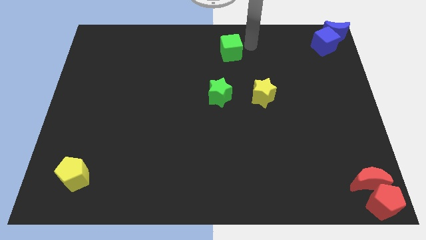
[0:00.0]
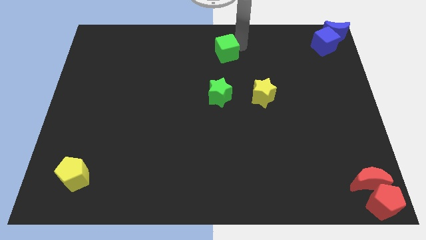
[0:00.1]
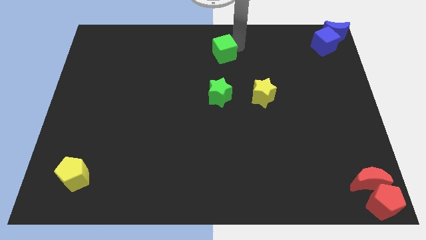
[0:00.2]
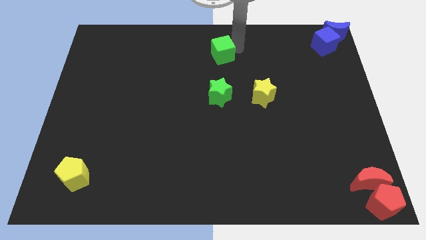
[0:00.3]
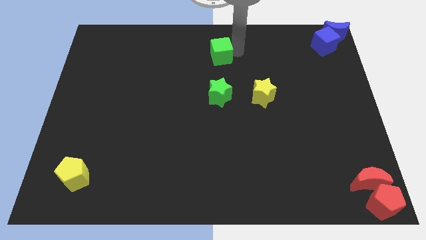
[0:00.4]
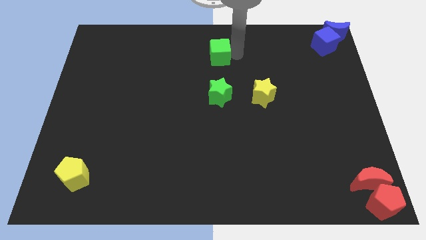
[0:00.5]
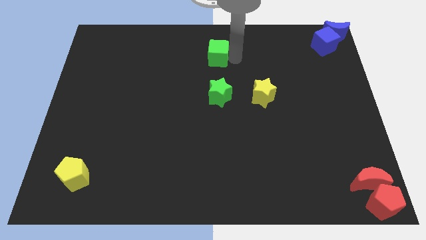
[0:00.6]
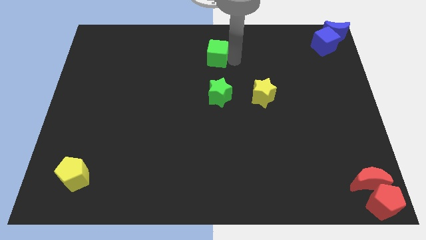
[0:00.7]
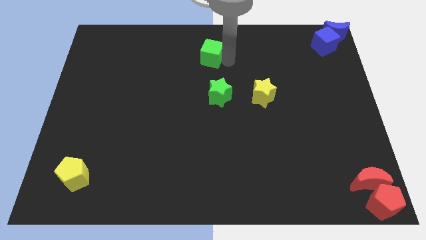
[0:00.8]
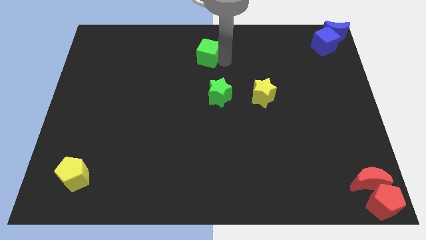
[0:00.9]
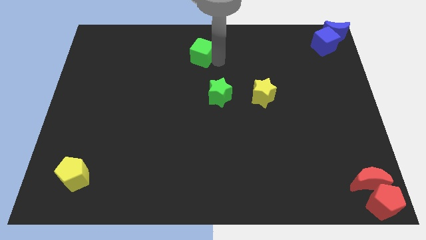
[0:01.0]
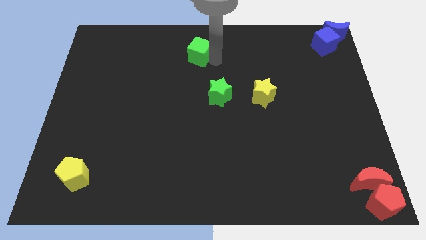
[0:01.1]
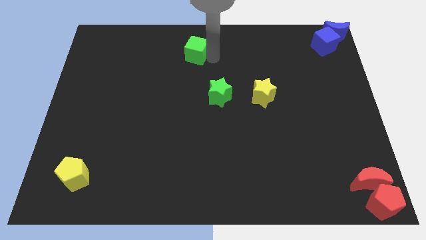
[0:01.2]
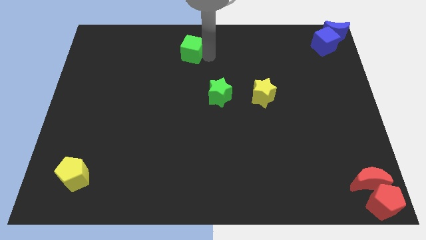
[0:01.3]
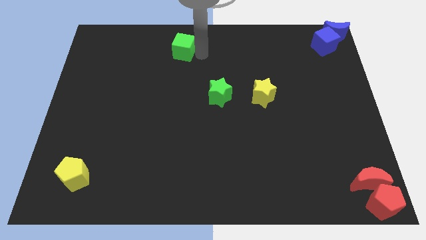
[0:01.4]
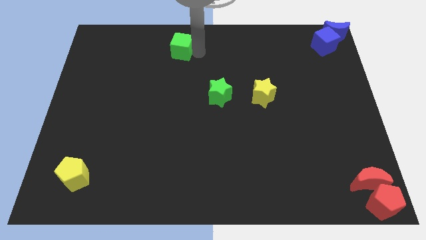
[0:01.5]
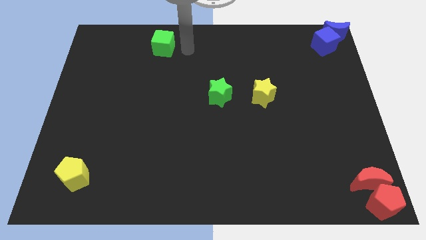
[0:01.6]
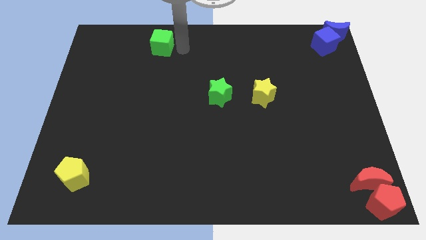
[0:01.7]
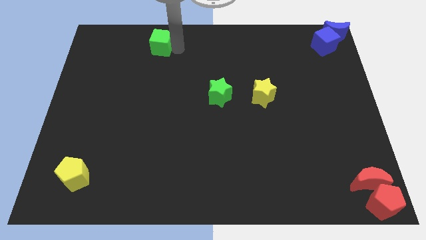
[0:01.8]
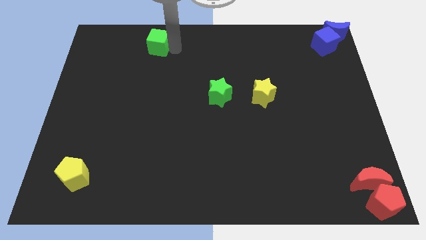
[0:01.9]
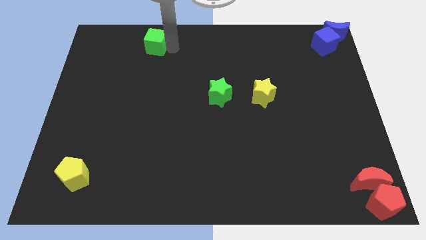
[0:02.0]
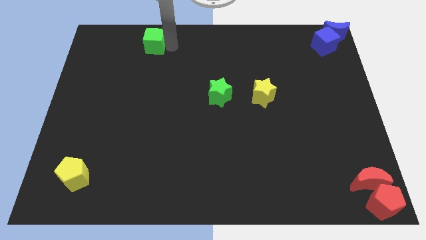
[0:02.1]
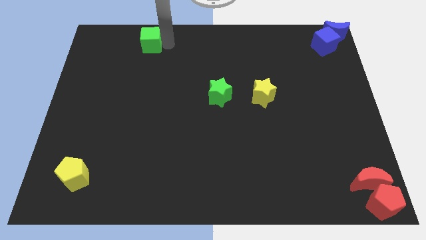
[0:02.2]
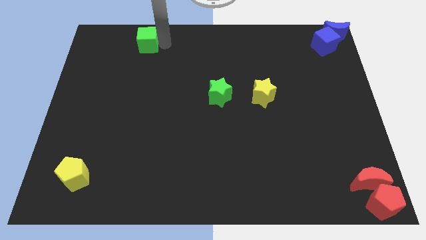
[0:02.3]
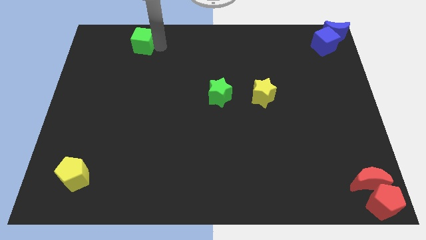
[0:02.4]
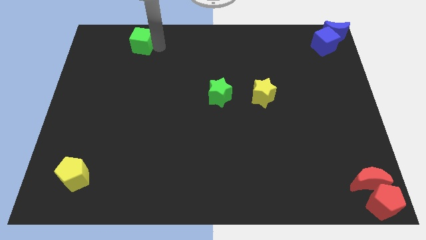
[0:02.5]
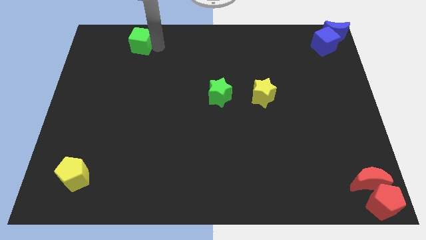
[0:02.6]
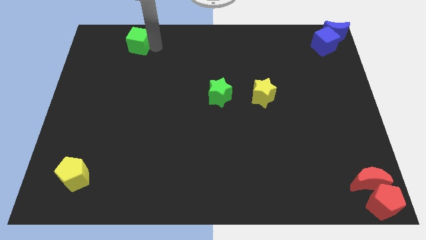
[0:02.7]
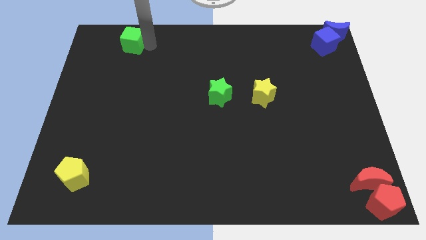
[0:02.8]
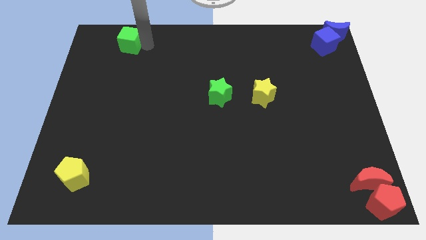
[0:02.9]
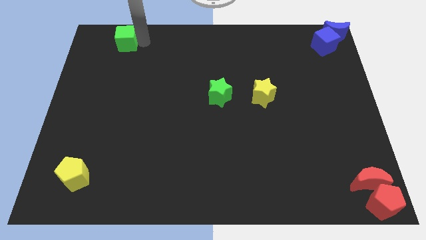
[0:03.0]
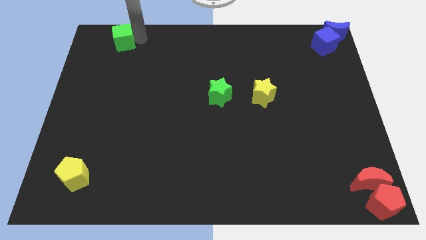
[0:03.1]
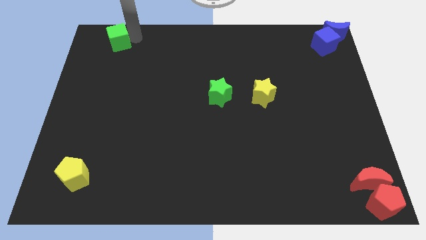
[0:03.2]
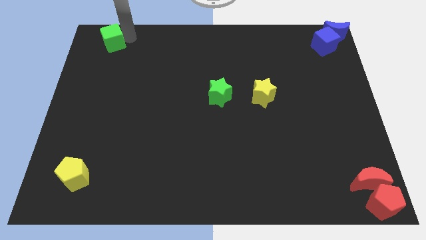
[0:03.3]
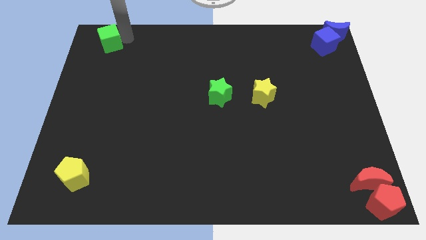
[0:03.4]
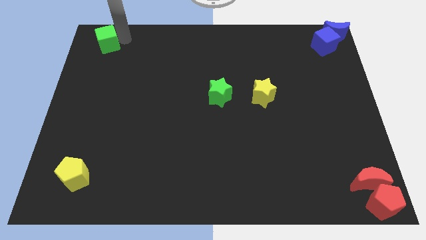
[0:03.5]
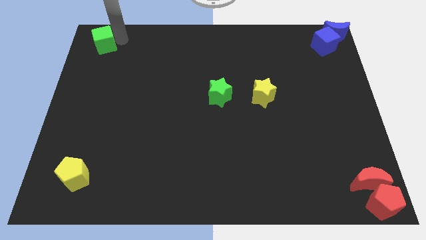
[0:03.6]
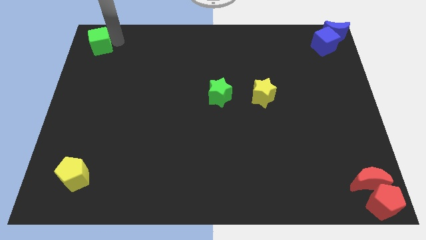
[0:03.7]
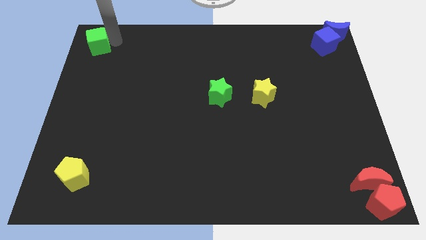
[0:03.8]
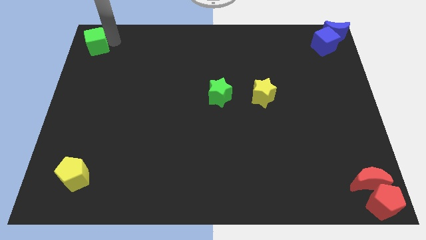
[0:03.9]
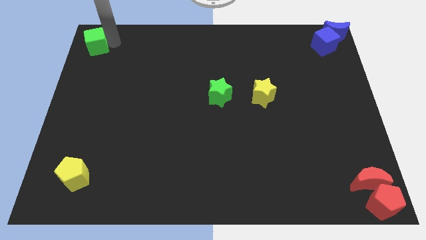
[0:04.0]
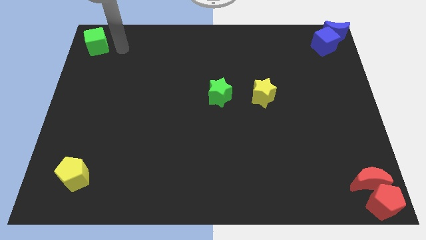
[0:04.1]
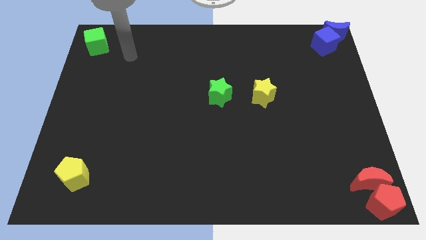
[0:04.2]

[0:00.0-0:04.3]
push the green cube towards the top left corner of the board

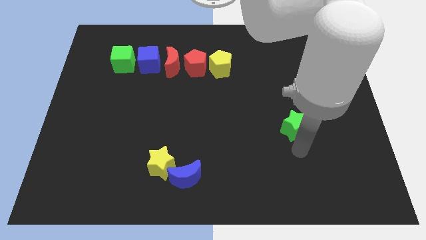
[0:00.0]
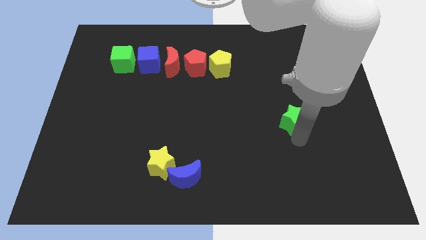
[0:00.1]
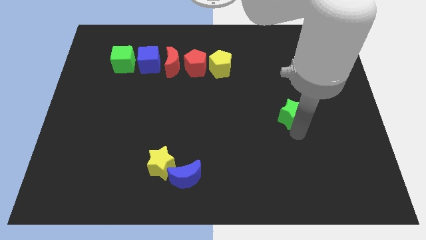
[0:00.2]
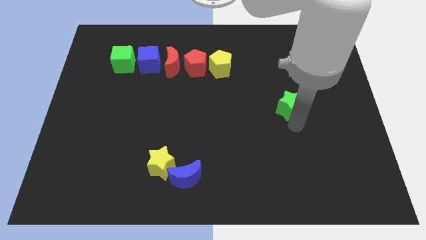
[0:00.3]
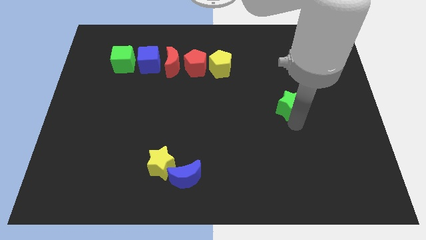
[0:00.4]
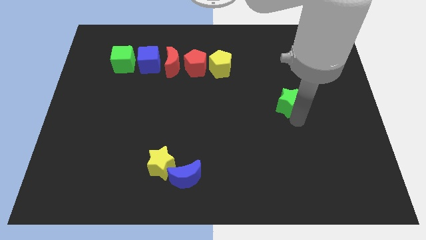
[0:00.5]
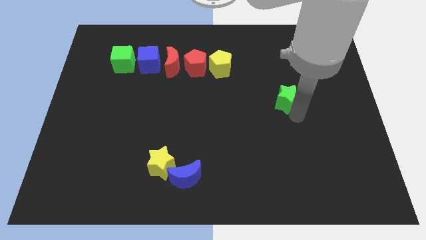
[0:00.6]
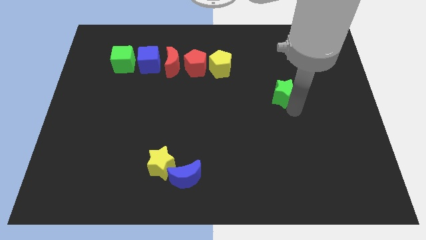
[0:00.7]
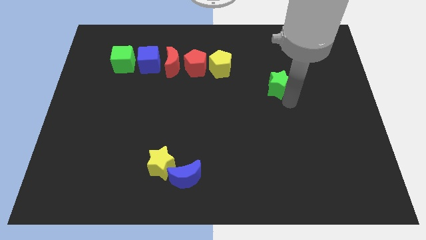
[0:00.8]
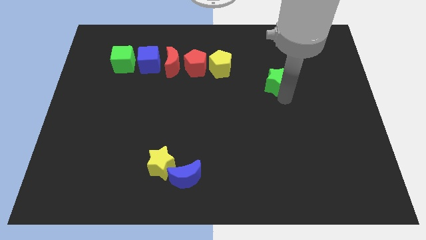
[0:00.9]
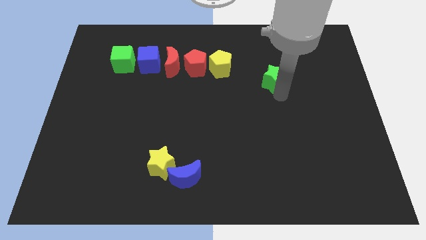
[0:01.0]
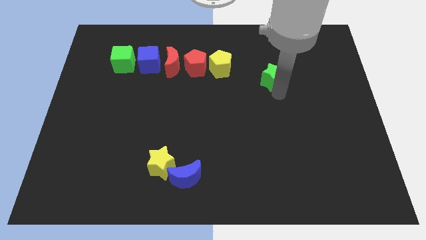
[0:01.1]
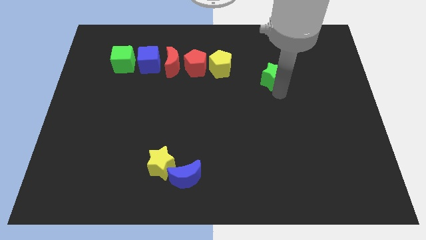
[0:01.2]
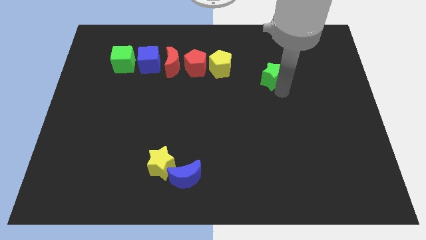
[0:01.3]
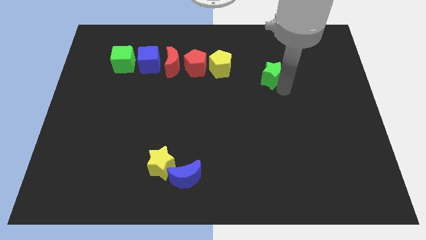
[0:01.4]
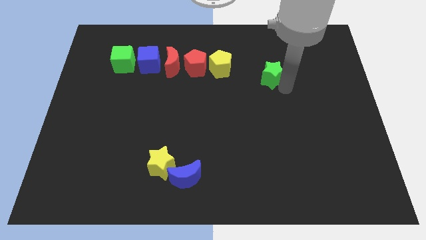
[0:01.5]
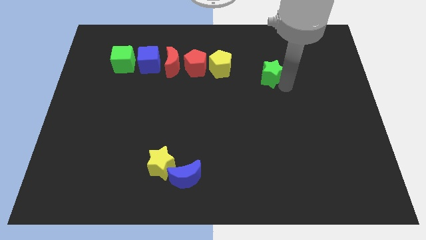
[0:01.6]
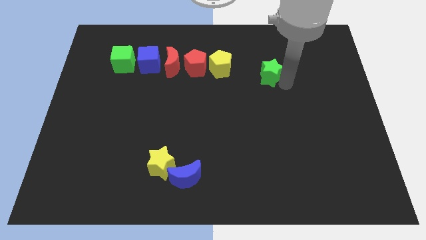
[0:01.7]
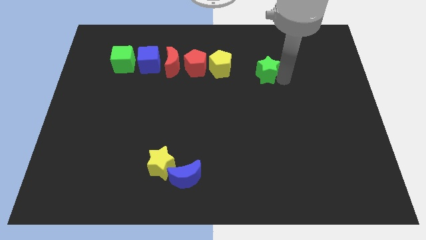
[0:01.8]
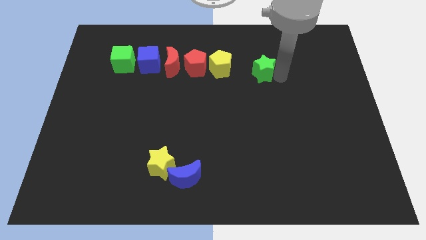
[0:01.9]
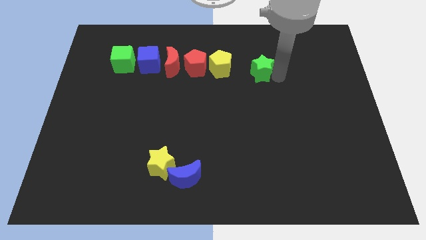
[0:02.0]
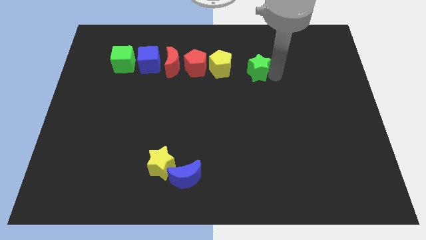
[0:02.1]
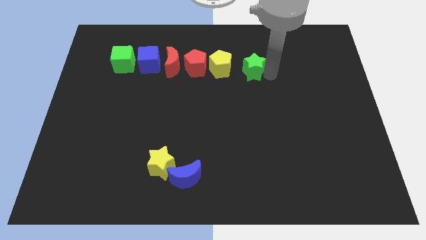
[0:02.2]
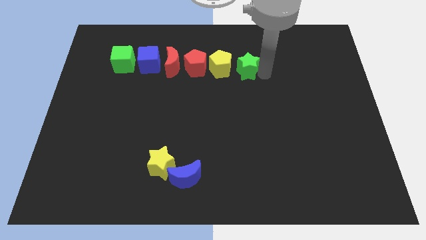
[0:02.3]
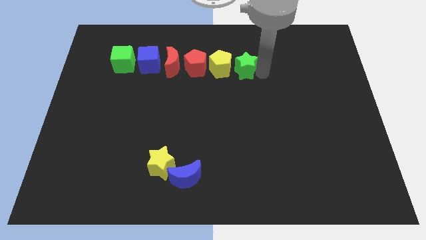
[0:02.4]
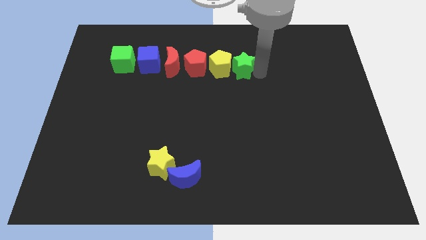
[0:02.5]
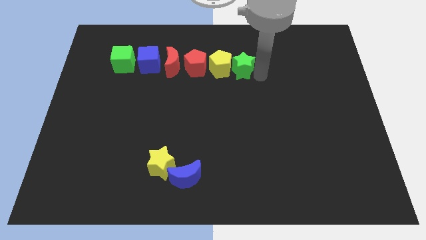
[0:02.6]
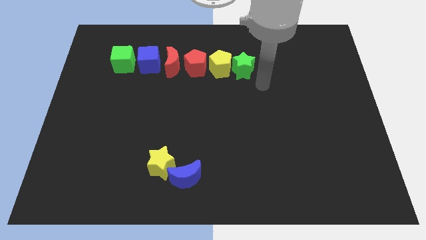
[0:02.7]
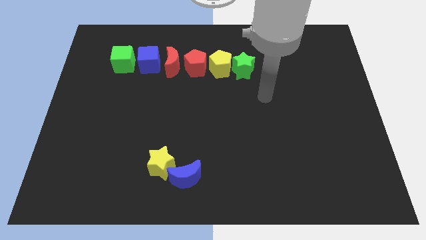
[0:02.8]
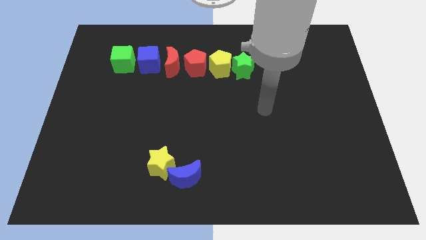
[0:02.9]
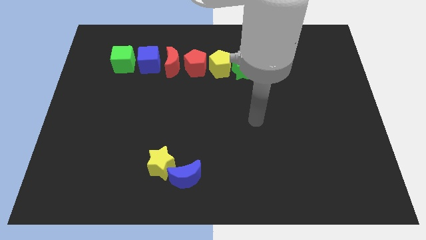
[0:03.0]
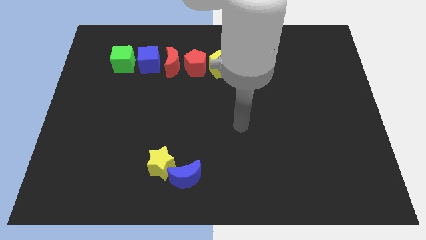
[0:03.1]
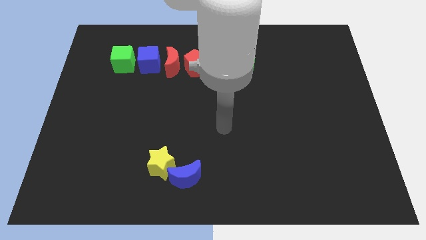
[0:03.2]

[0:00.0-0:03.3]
place green star beside yellow pentagon

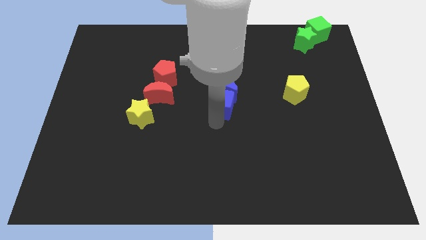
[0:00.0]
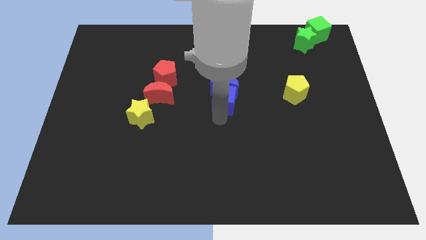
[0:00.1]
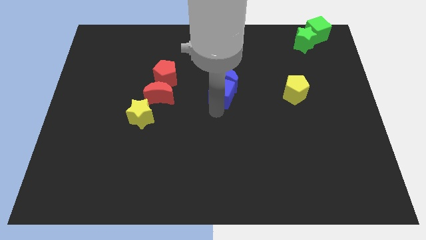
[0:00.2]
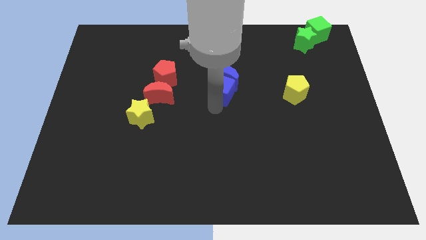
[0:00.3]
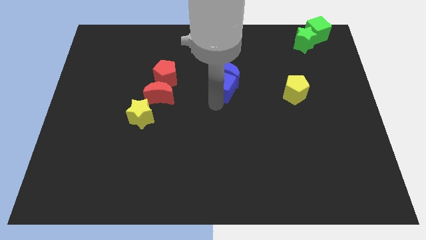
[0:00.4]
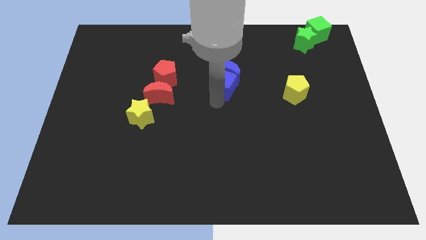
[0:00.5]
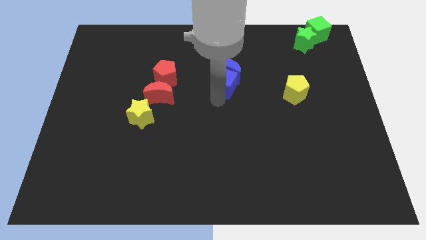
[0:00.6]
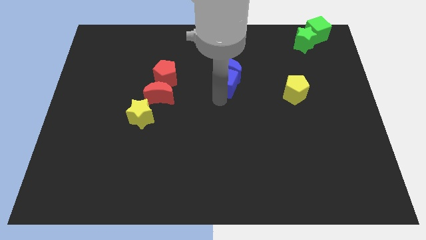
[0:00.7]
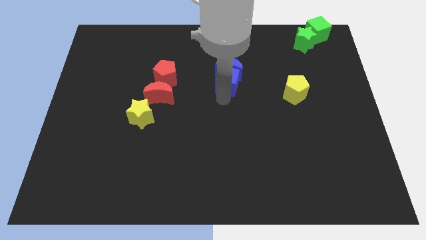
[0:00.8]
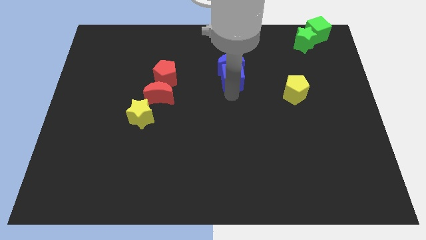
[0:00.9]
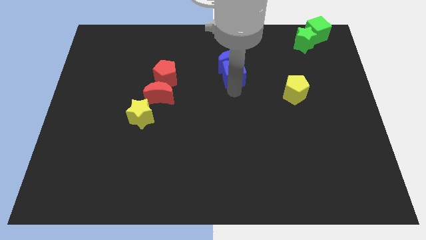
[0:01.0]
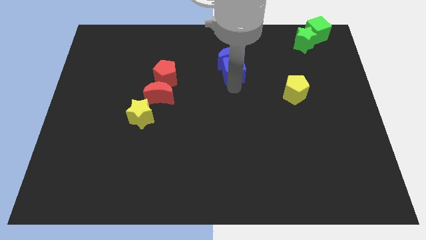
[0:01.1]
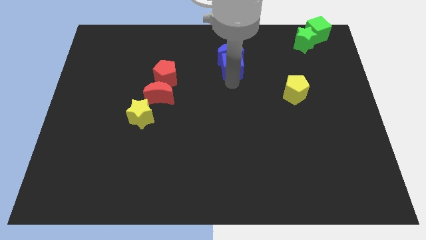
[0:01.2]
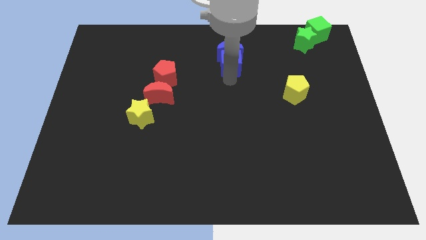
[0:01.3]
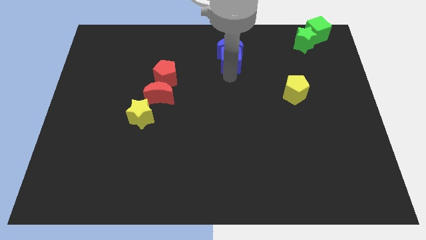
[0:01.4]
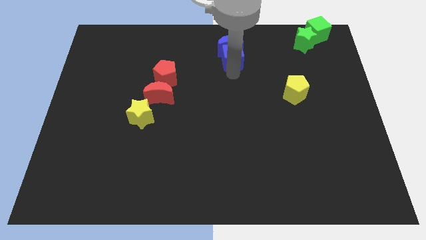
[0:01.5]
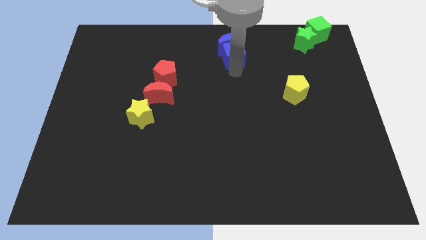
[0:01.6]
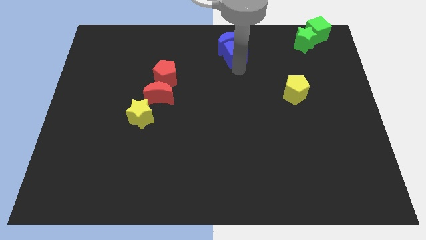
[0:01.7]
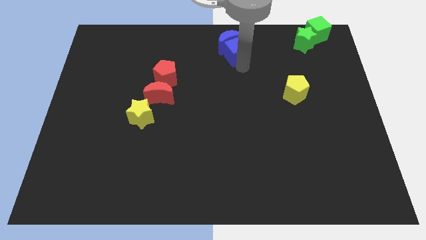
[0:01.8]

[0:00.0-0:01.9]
slide the blue cube along with the blue moon diagonally top left to the yellow pentagon
